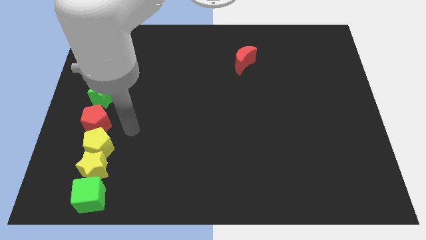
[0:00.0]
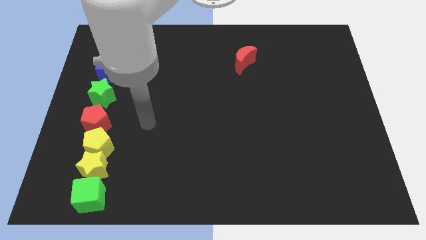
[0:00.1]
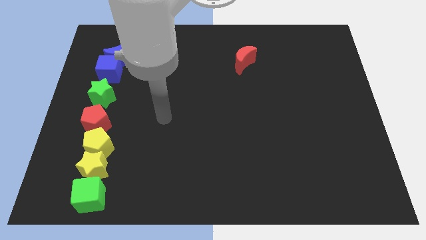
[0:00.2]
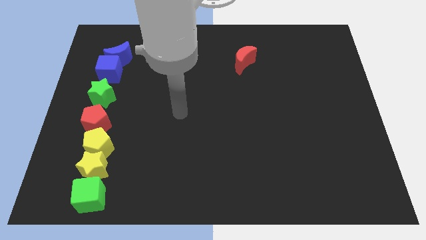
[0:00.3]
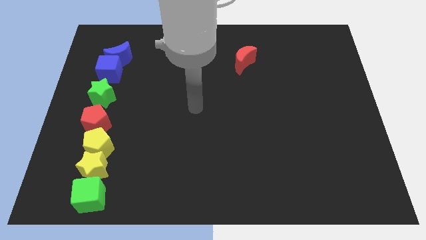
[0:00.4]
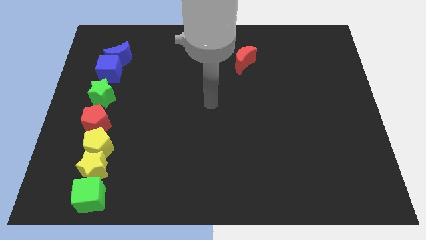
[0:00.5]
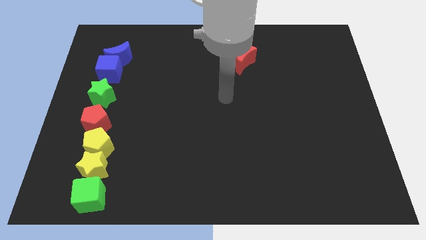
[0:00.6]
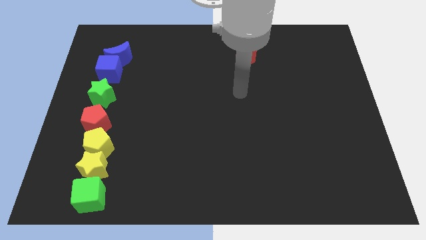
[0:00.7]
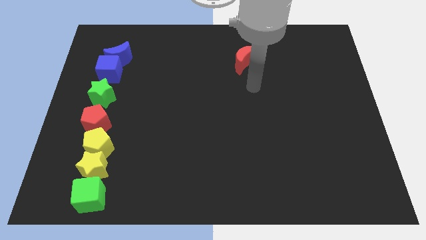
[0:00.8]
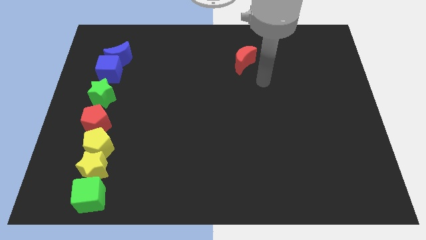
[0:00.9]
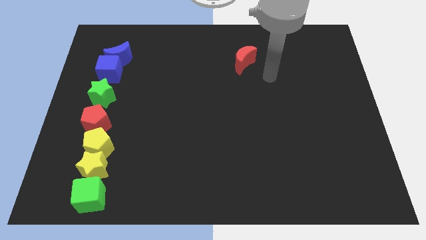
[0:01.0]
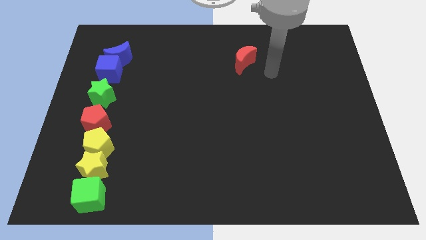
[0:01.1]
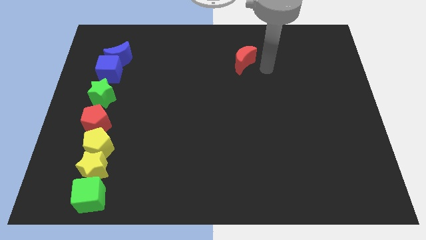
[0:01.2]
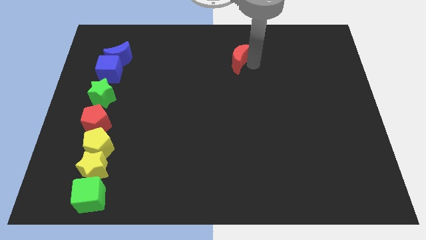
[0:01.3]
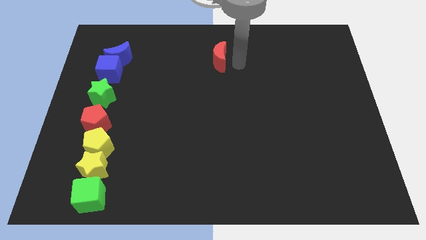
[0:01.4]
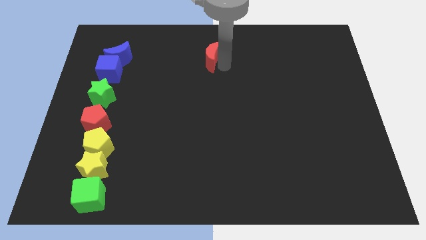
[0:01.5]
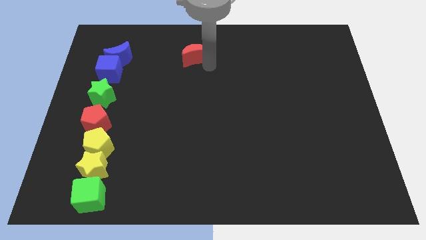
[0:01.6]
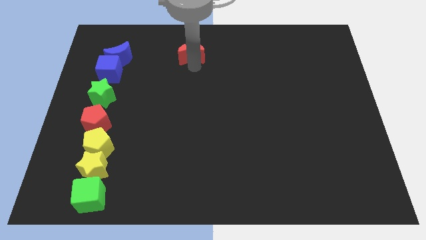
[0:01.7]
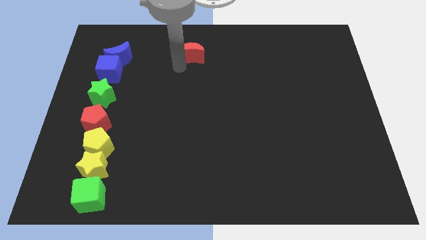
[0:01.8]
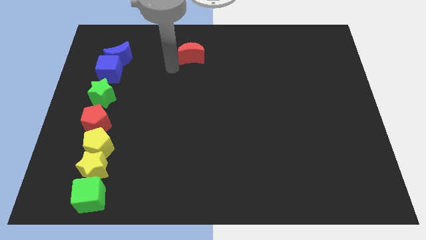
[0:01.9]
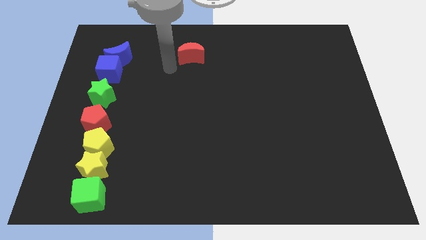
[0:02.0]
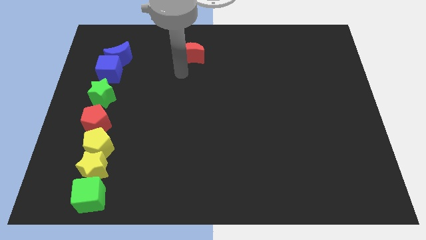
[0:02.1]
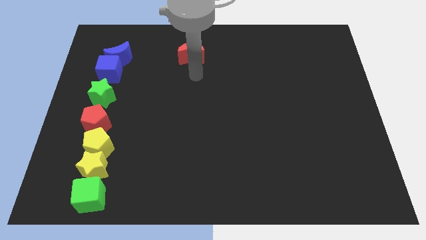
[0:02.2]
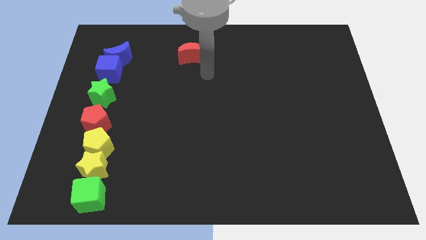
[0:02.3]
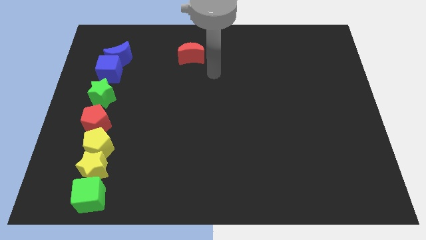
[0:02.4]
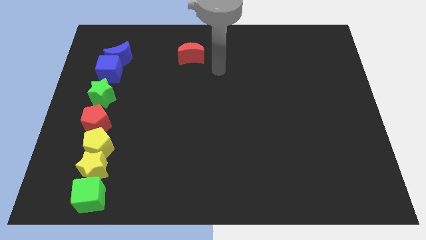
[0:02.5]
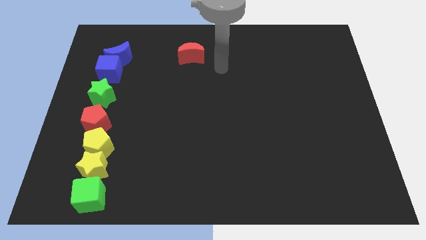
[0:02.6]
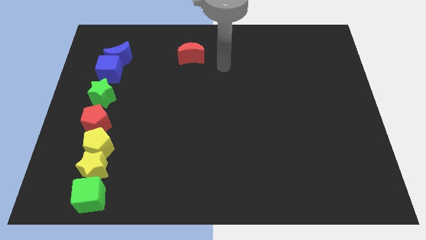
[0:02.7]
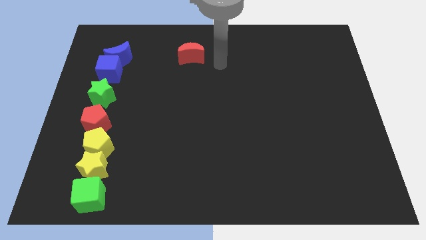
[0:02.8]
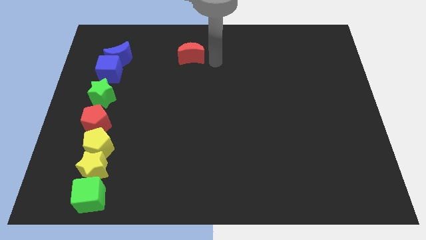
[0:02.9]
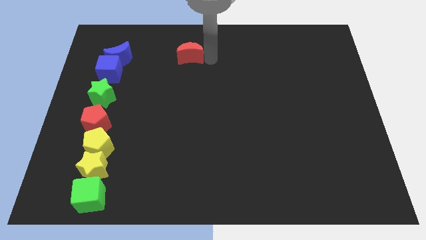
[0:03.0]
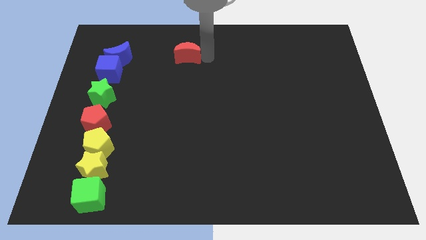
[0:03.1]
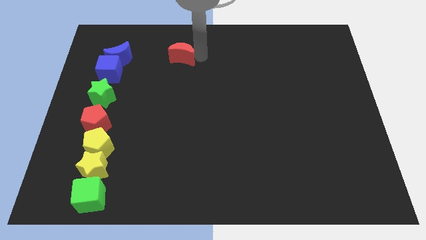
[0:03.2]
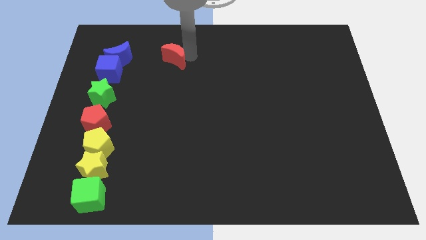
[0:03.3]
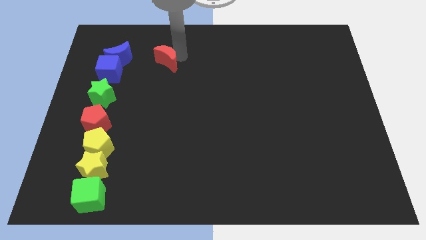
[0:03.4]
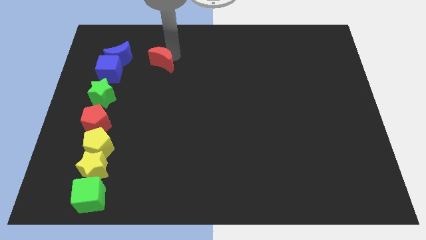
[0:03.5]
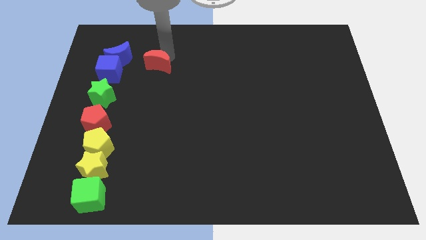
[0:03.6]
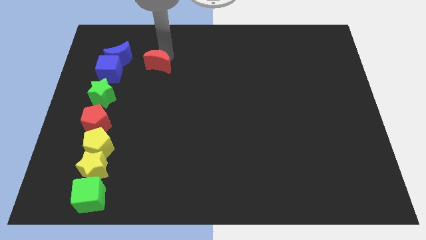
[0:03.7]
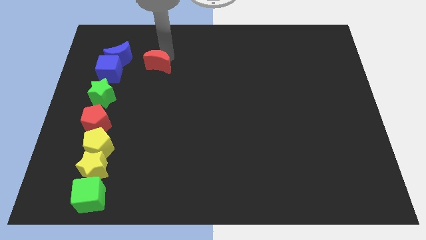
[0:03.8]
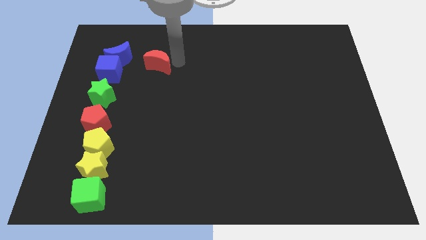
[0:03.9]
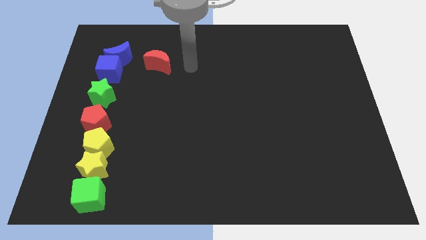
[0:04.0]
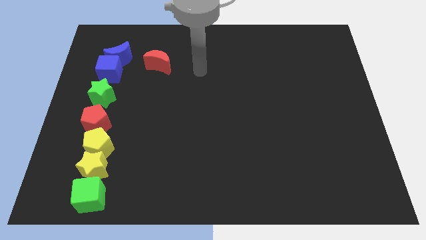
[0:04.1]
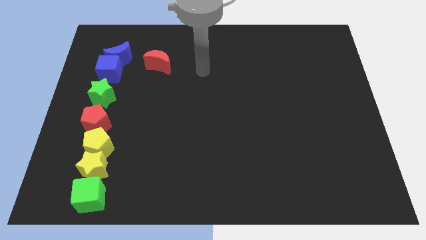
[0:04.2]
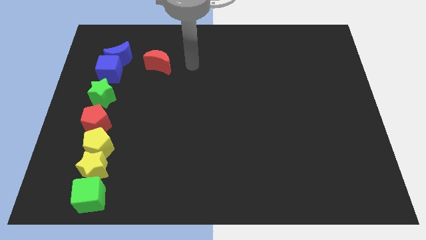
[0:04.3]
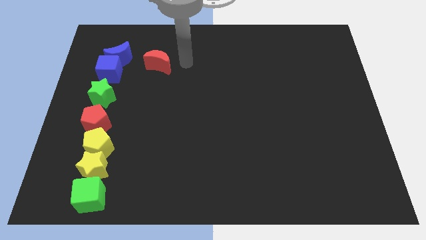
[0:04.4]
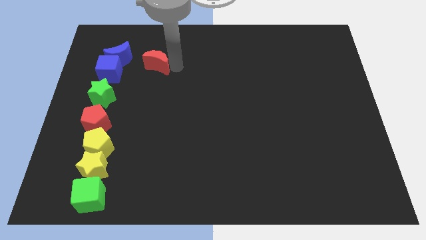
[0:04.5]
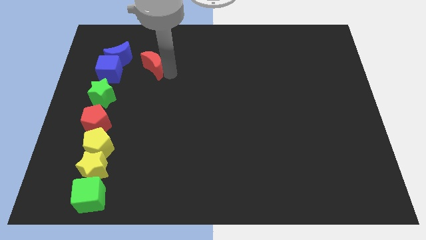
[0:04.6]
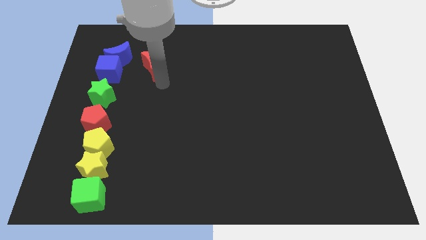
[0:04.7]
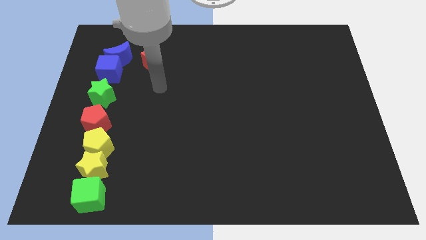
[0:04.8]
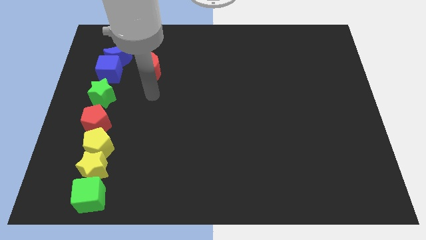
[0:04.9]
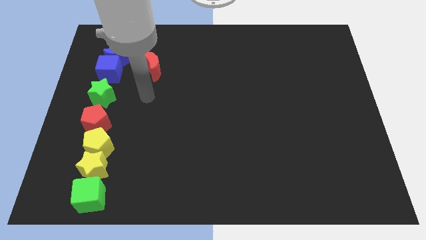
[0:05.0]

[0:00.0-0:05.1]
move the red crescent diagonal to the left of the blue cube

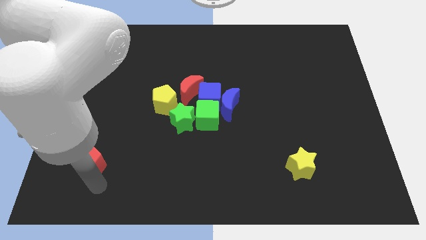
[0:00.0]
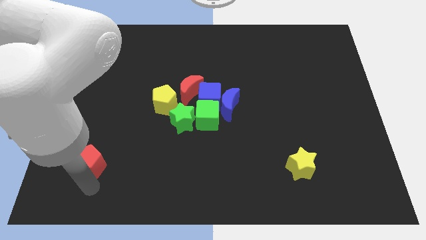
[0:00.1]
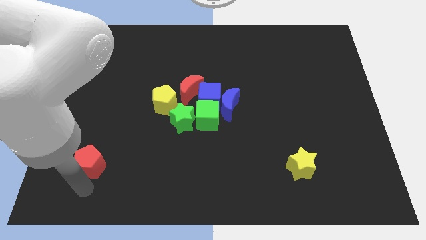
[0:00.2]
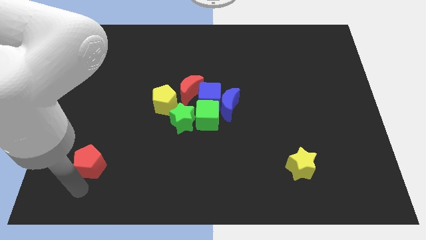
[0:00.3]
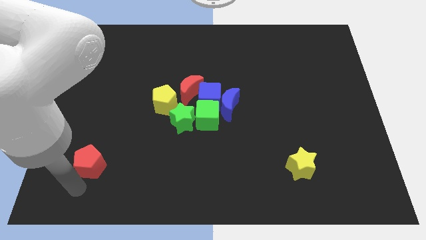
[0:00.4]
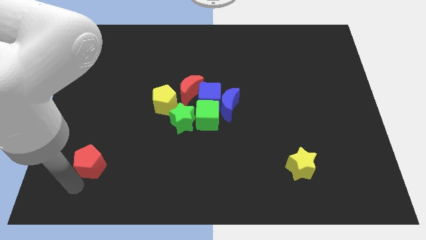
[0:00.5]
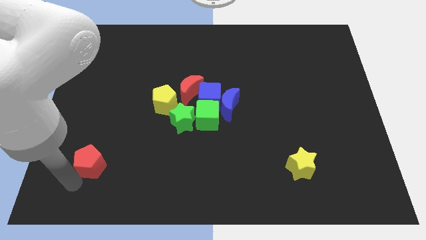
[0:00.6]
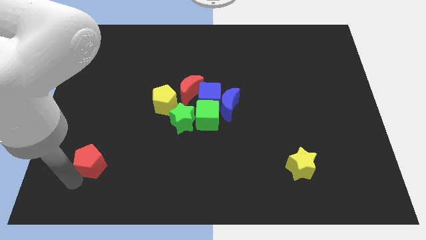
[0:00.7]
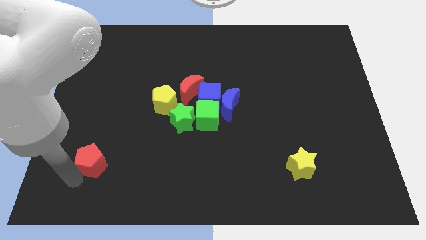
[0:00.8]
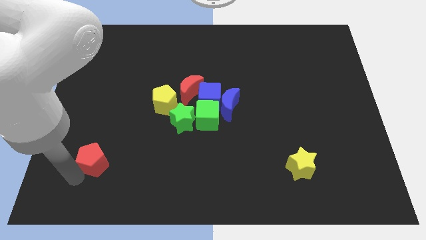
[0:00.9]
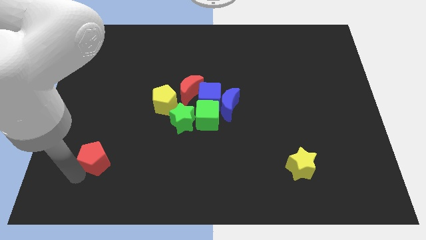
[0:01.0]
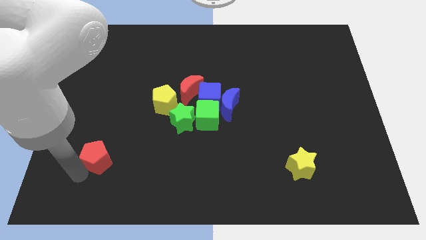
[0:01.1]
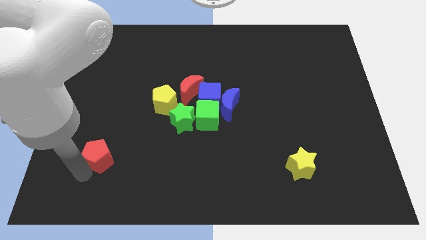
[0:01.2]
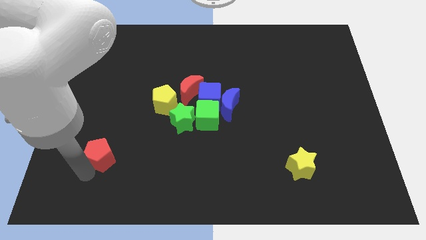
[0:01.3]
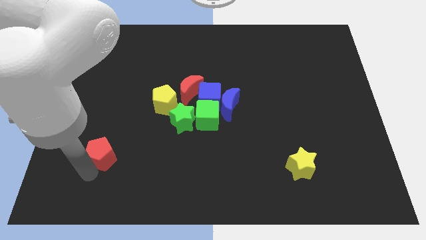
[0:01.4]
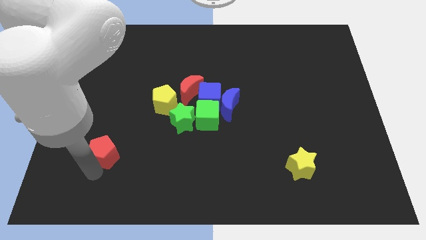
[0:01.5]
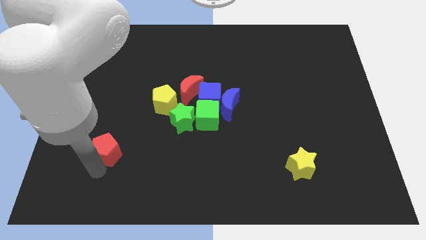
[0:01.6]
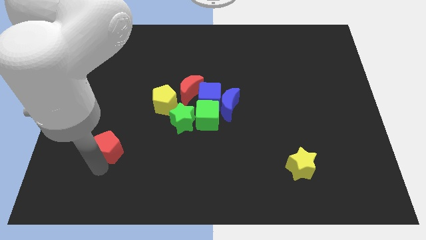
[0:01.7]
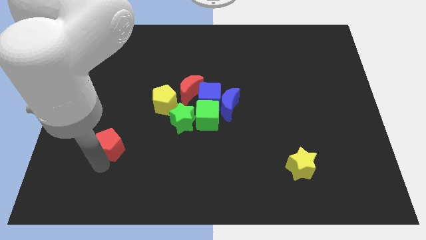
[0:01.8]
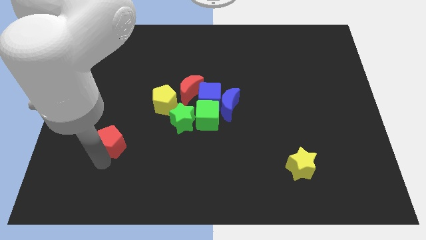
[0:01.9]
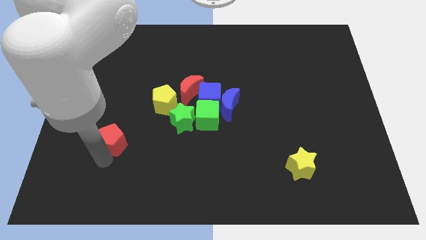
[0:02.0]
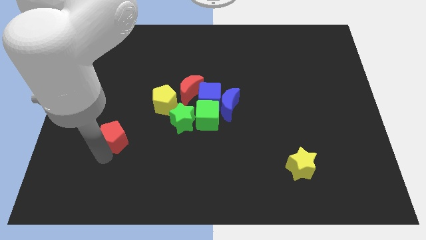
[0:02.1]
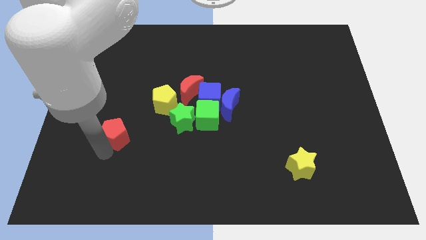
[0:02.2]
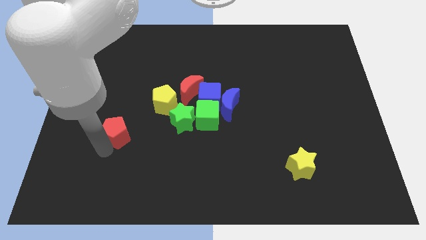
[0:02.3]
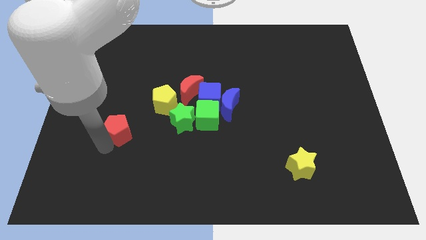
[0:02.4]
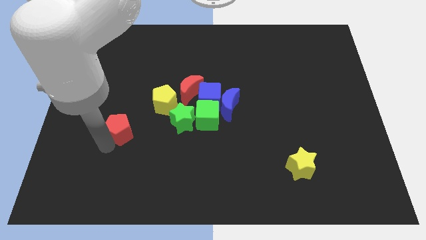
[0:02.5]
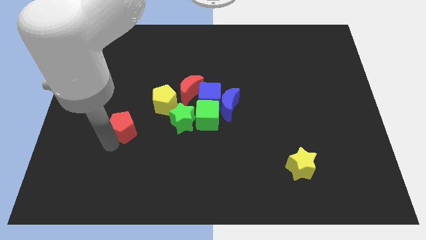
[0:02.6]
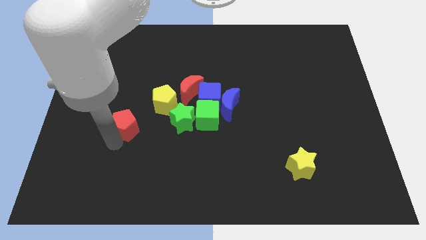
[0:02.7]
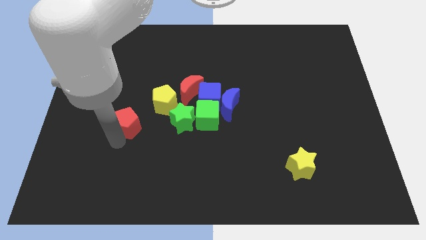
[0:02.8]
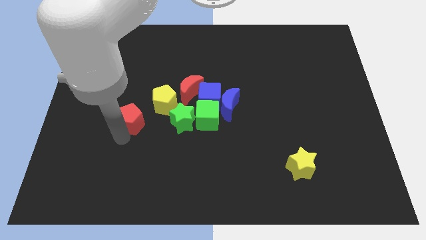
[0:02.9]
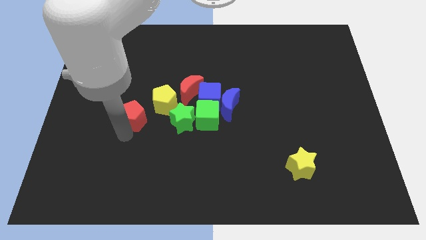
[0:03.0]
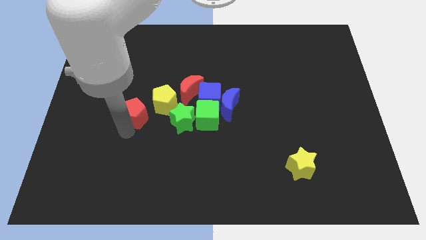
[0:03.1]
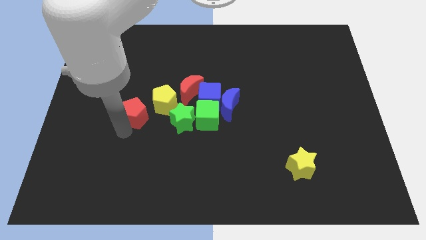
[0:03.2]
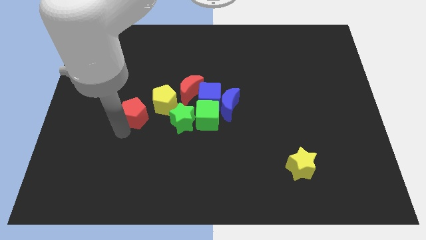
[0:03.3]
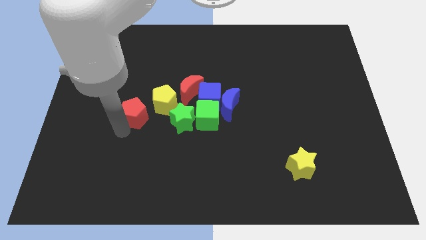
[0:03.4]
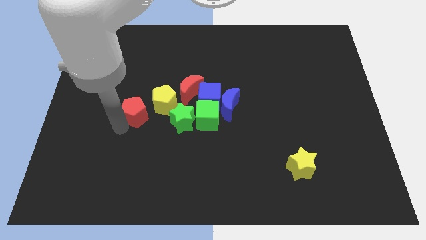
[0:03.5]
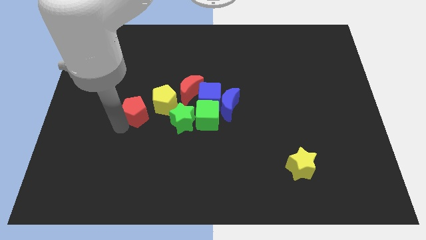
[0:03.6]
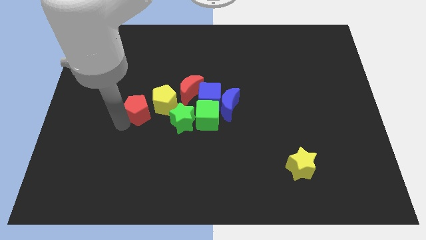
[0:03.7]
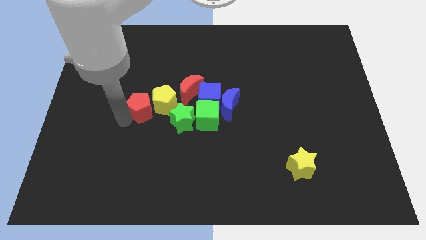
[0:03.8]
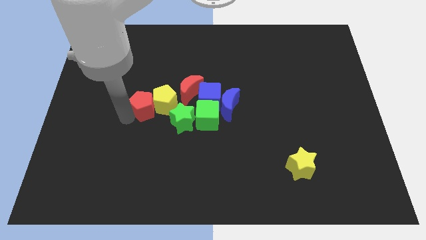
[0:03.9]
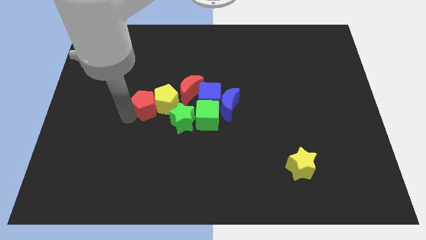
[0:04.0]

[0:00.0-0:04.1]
slide red pentagon close to yellow pentagon
